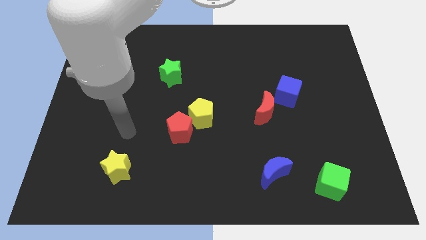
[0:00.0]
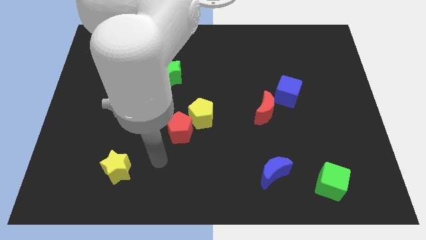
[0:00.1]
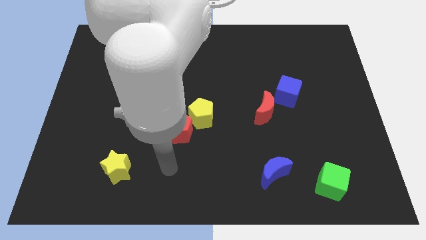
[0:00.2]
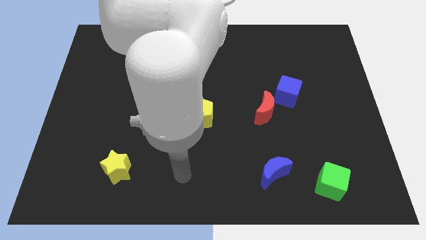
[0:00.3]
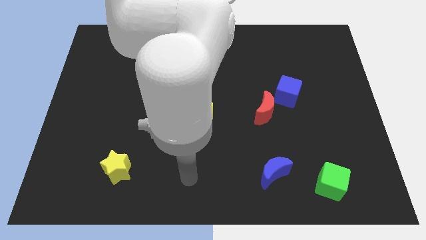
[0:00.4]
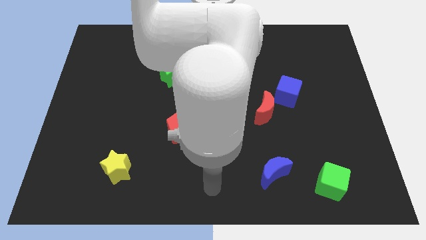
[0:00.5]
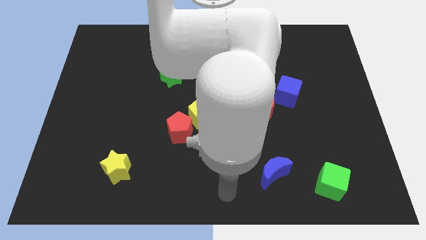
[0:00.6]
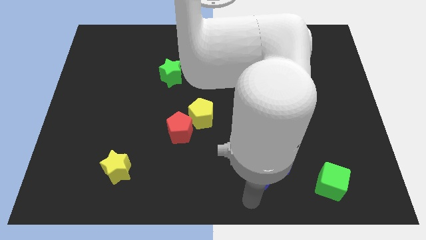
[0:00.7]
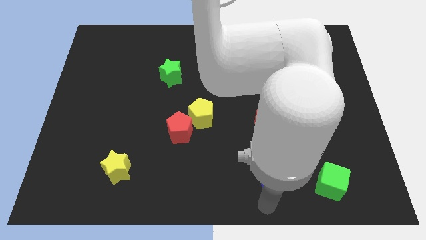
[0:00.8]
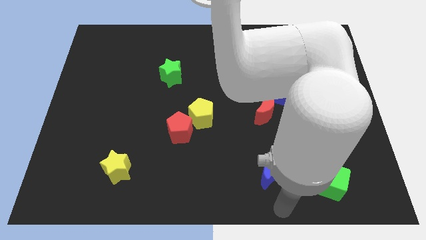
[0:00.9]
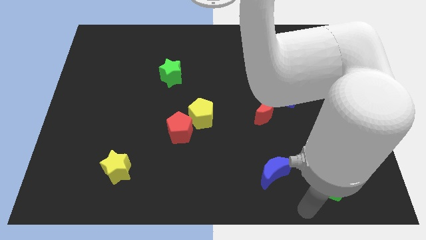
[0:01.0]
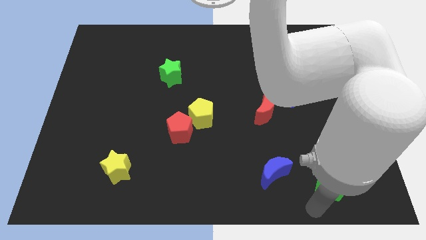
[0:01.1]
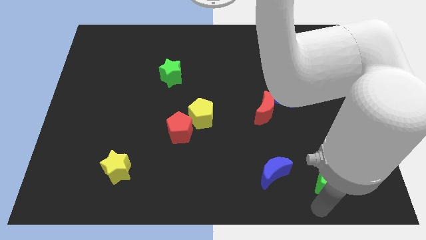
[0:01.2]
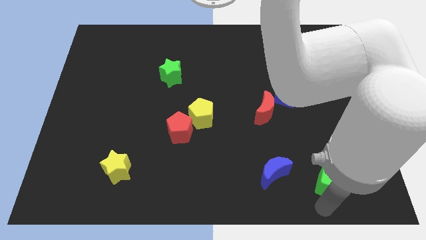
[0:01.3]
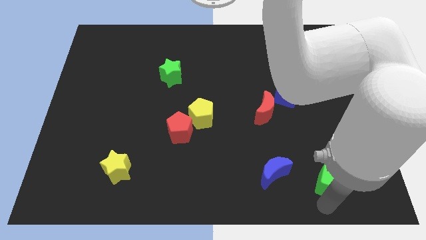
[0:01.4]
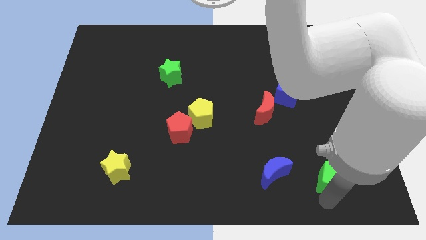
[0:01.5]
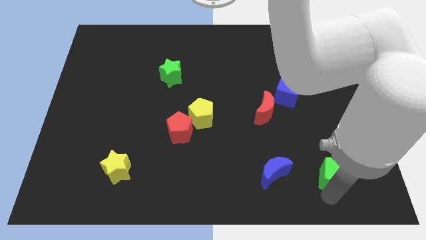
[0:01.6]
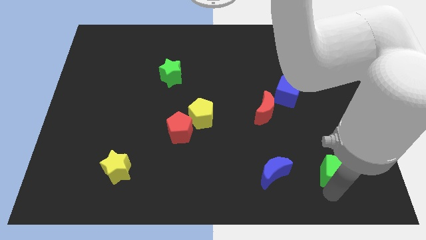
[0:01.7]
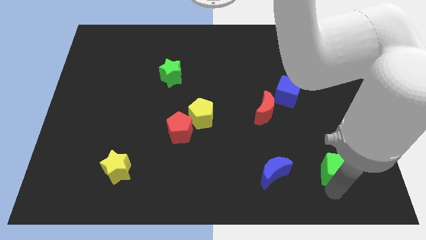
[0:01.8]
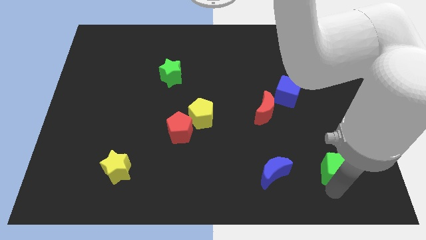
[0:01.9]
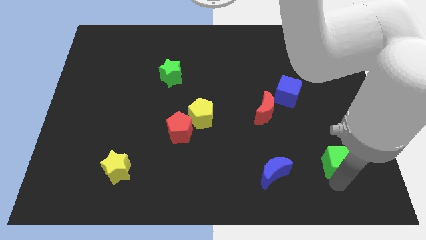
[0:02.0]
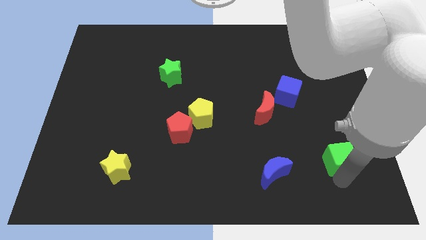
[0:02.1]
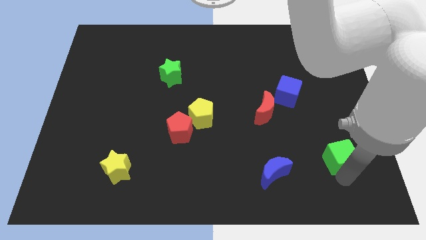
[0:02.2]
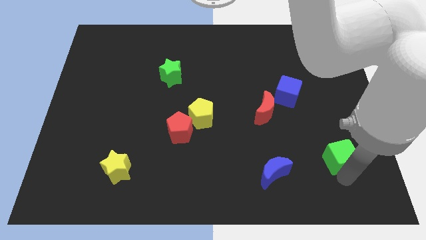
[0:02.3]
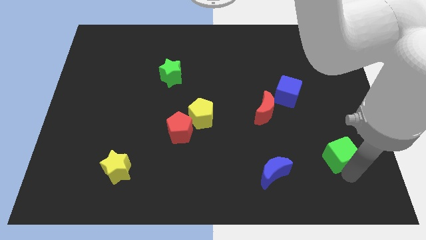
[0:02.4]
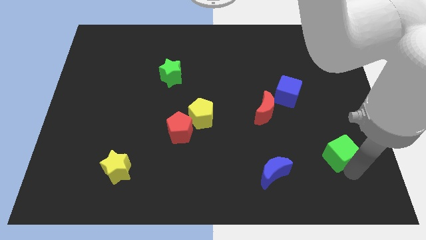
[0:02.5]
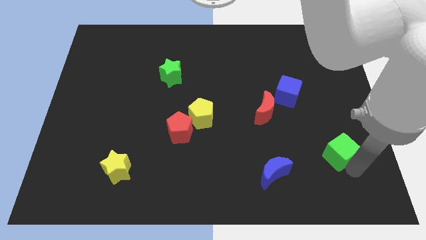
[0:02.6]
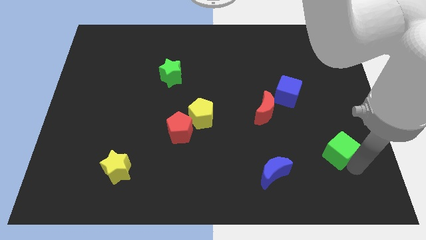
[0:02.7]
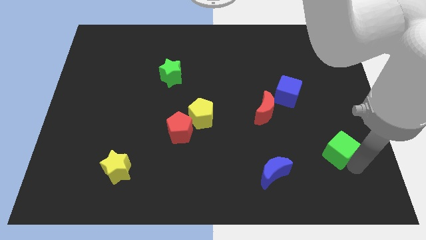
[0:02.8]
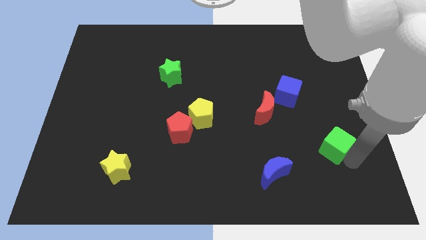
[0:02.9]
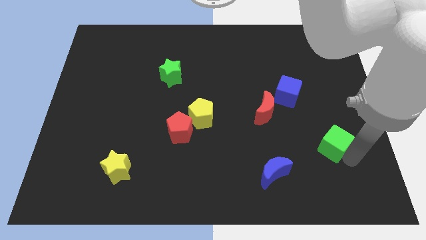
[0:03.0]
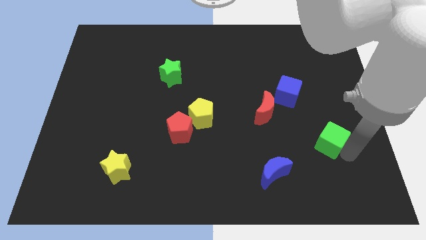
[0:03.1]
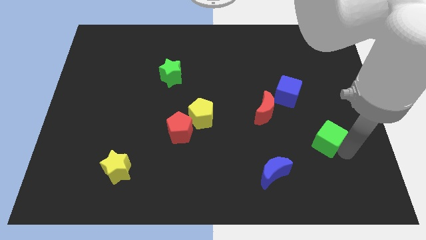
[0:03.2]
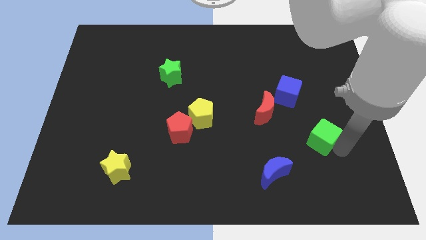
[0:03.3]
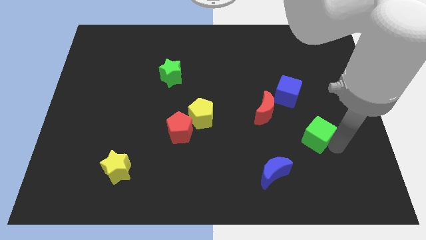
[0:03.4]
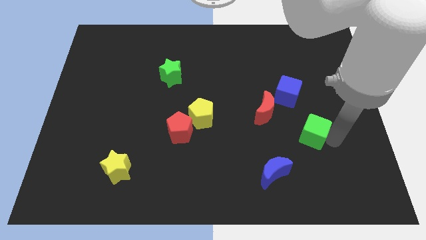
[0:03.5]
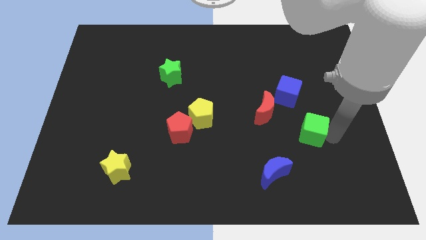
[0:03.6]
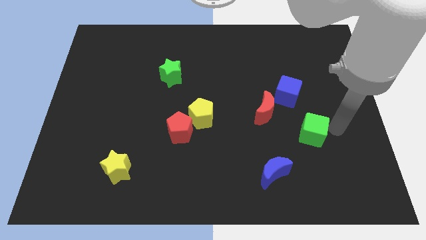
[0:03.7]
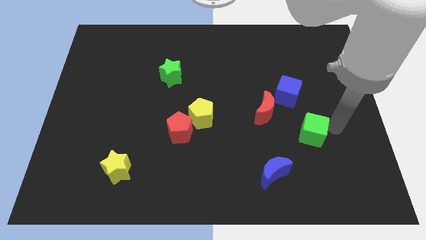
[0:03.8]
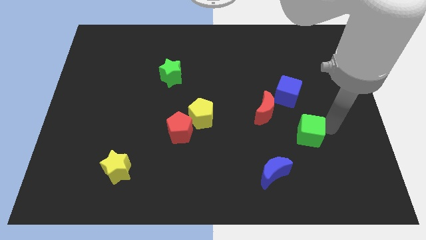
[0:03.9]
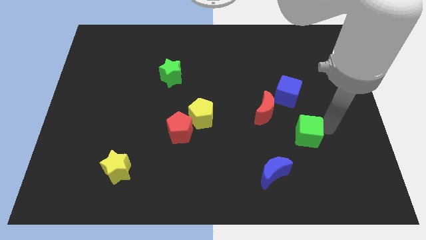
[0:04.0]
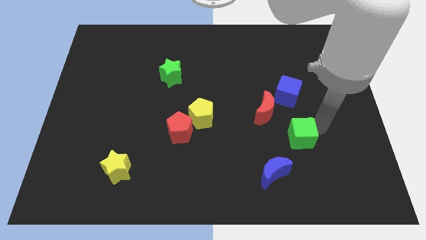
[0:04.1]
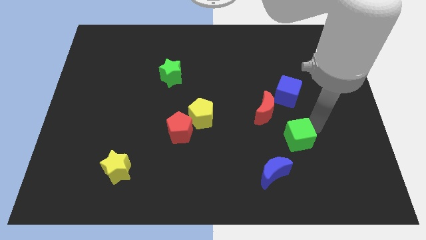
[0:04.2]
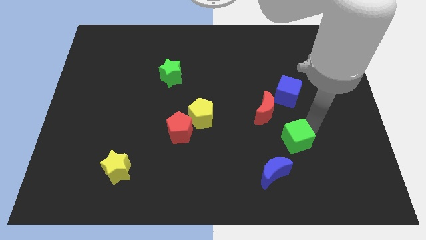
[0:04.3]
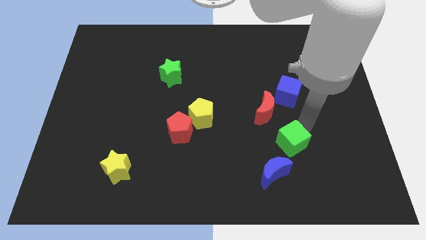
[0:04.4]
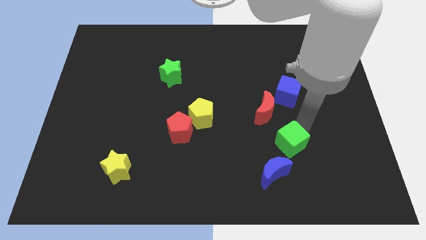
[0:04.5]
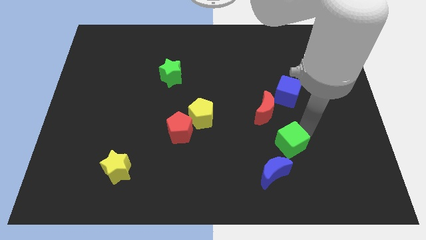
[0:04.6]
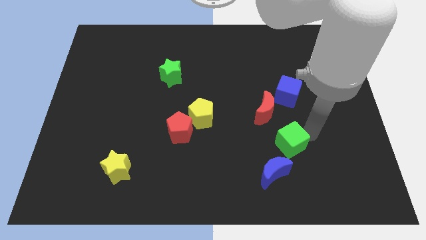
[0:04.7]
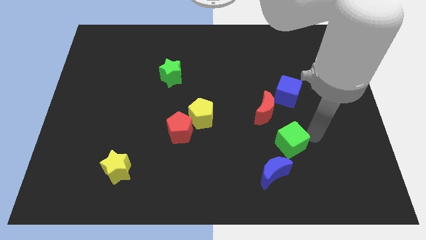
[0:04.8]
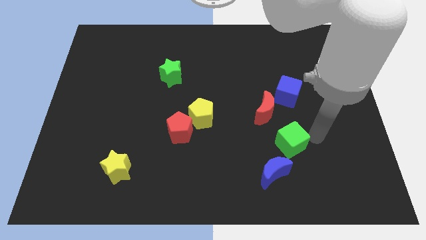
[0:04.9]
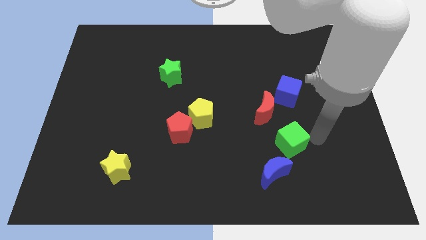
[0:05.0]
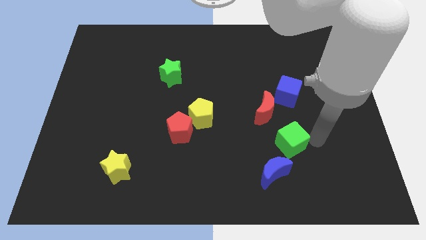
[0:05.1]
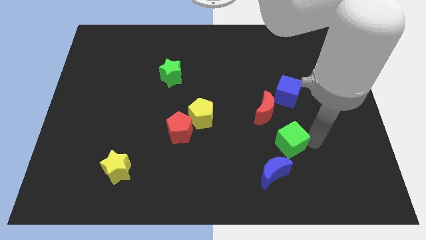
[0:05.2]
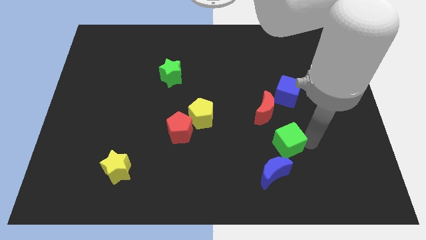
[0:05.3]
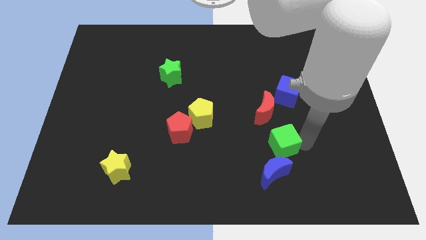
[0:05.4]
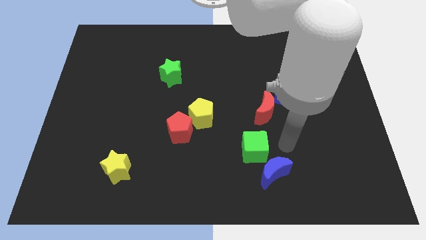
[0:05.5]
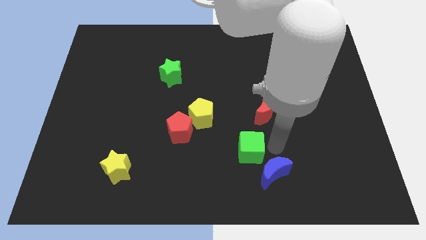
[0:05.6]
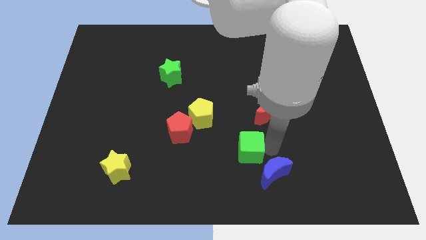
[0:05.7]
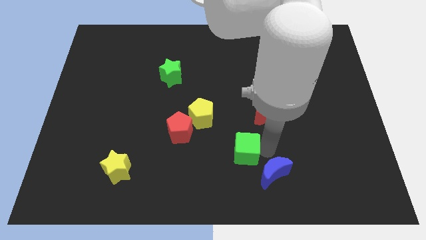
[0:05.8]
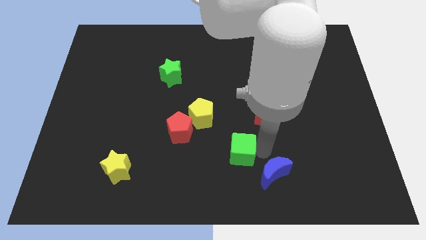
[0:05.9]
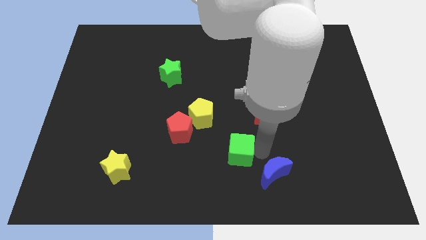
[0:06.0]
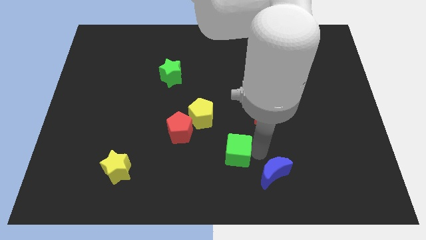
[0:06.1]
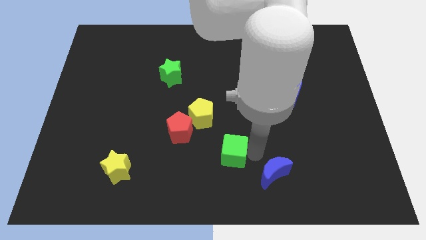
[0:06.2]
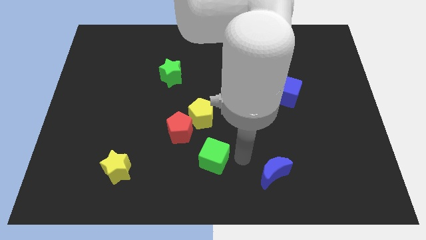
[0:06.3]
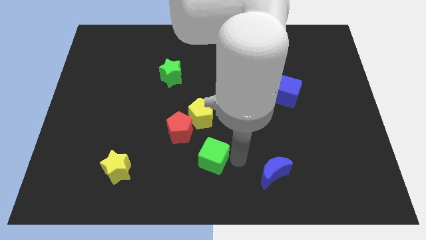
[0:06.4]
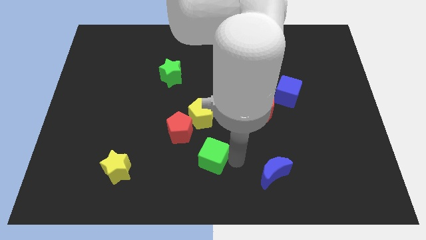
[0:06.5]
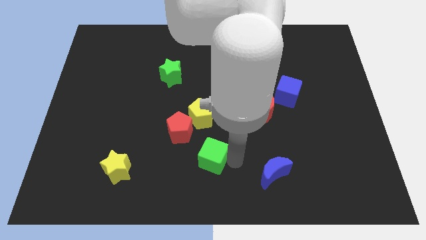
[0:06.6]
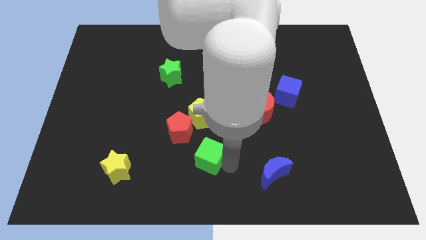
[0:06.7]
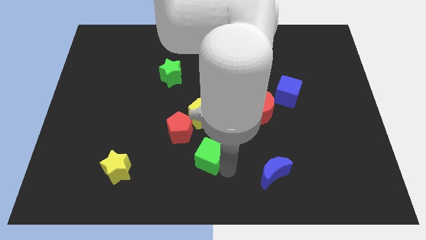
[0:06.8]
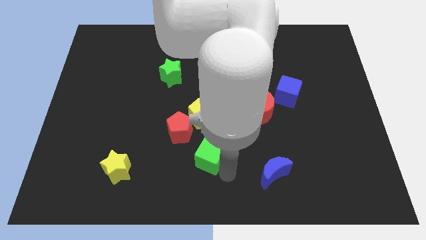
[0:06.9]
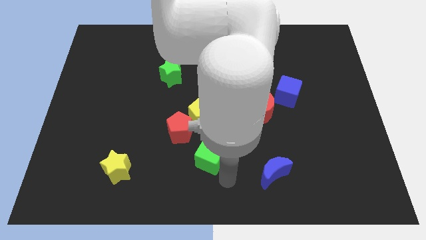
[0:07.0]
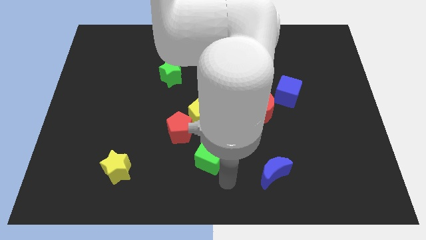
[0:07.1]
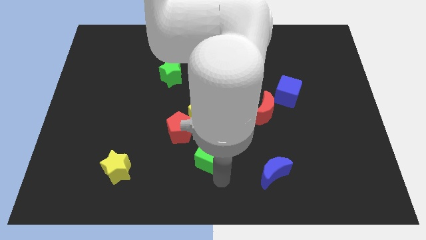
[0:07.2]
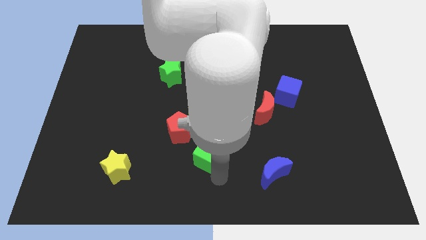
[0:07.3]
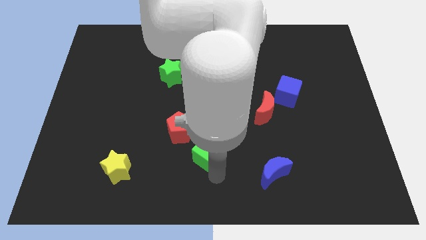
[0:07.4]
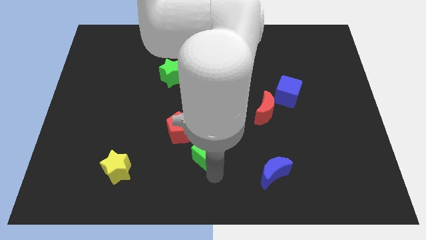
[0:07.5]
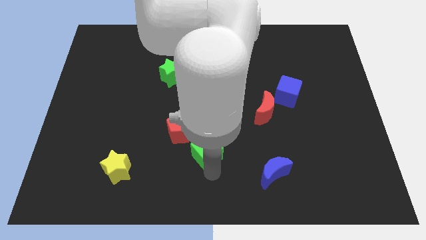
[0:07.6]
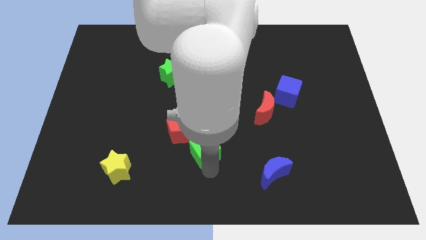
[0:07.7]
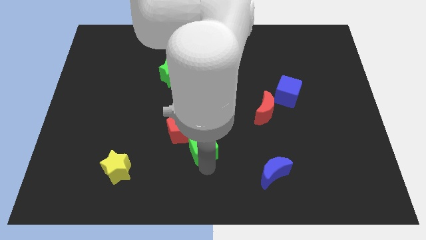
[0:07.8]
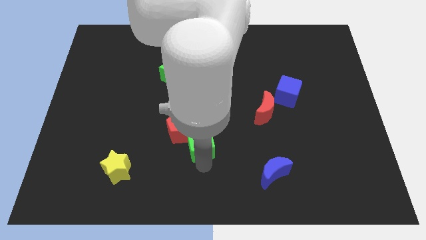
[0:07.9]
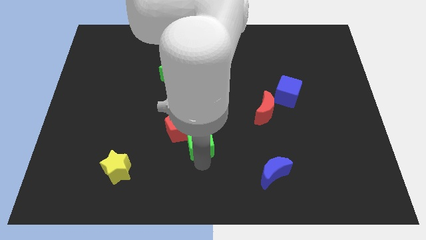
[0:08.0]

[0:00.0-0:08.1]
put the green cube next to the red pentagon
